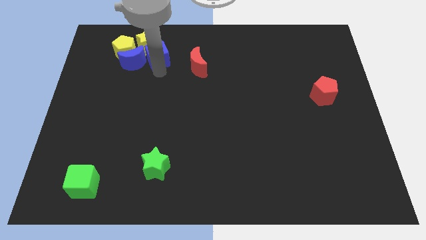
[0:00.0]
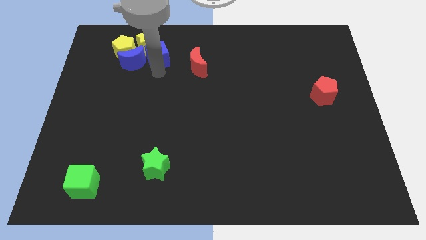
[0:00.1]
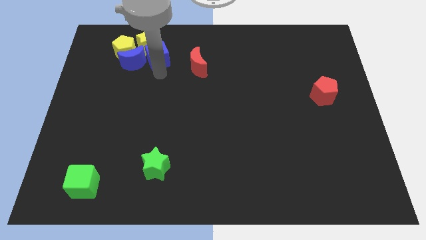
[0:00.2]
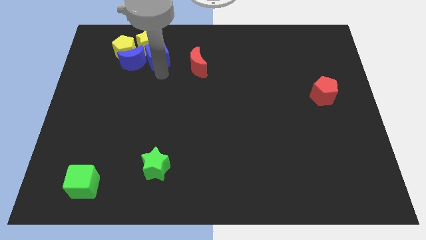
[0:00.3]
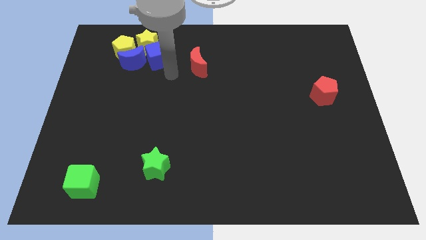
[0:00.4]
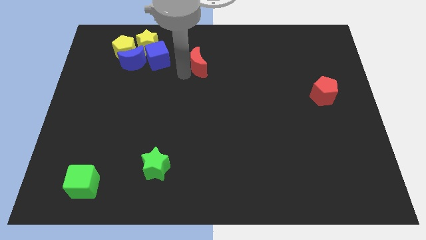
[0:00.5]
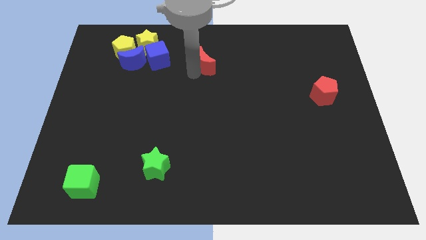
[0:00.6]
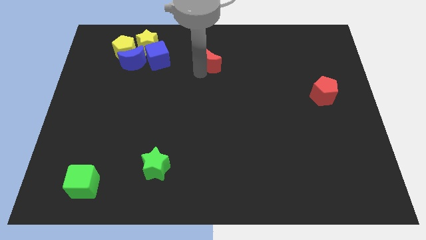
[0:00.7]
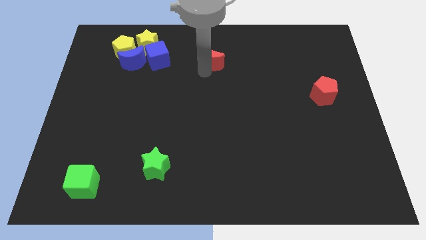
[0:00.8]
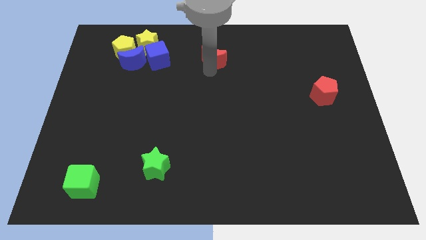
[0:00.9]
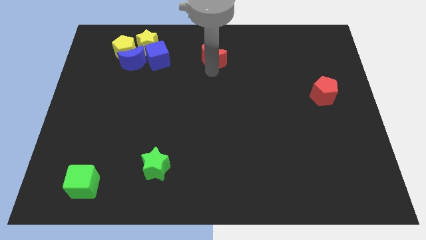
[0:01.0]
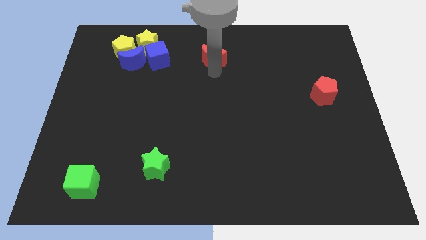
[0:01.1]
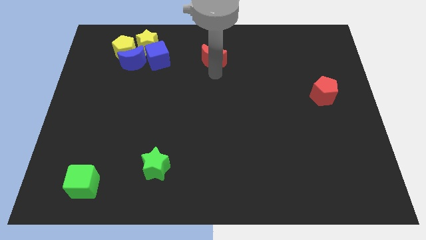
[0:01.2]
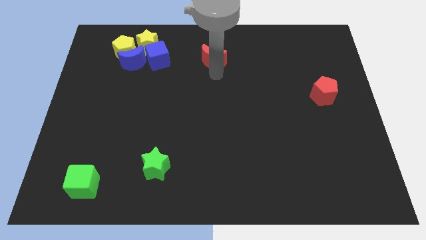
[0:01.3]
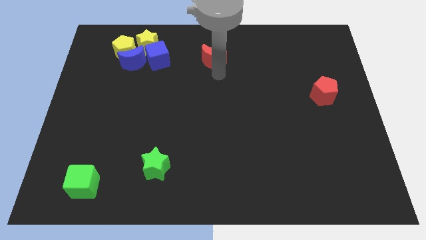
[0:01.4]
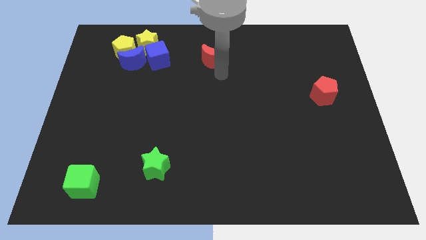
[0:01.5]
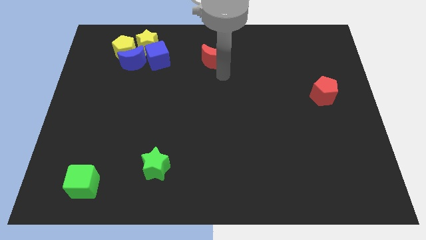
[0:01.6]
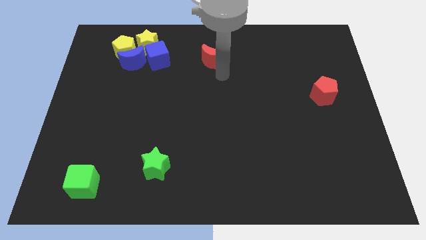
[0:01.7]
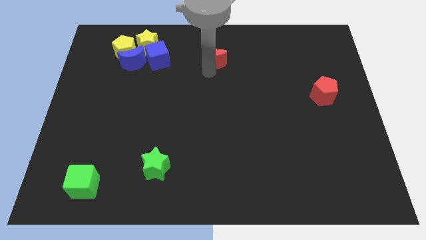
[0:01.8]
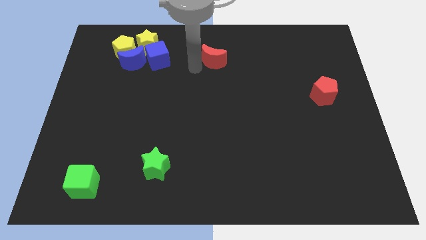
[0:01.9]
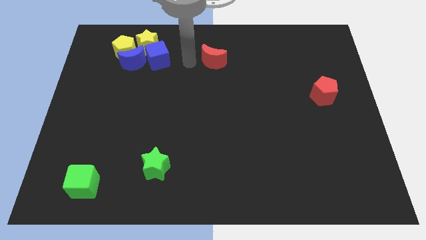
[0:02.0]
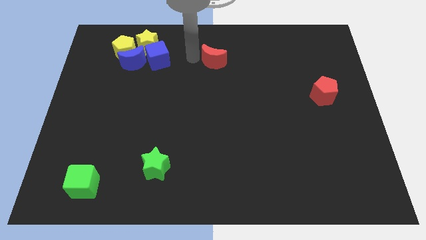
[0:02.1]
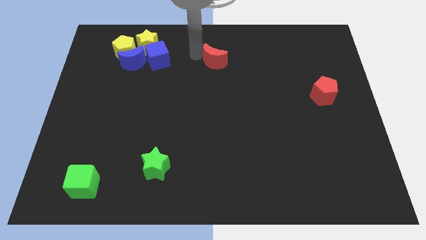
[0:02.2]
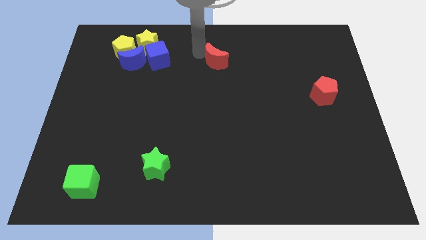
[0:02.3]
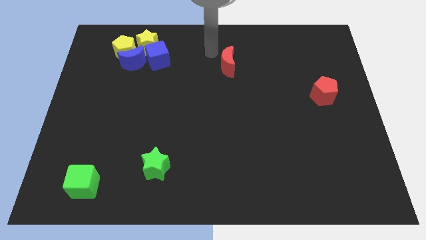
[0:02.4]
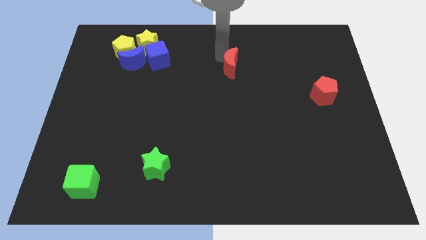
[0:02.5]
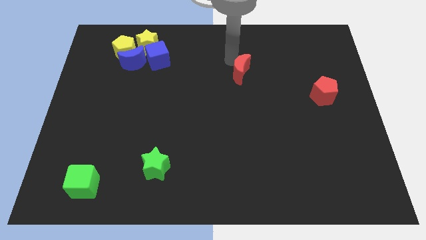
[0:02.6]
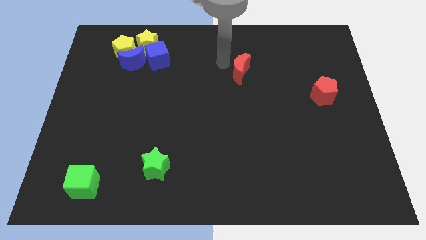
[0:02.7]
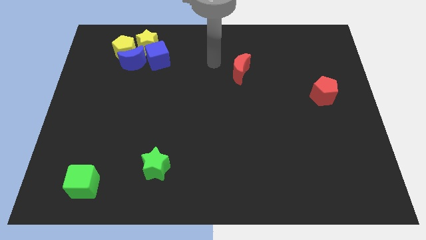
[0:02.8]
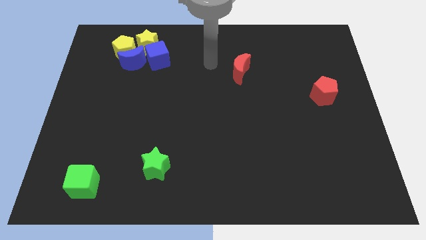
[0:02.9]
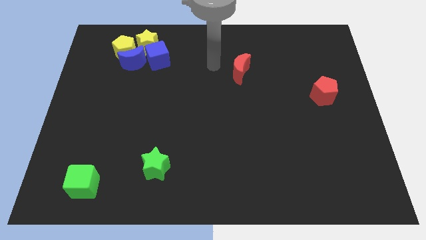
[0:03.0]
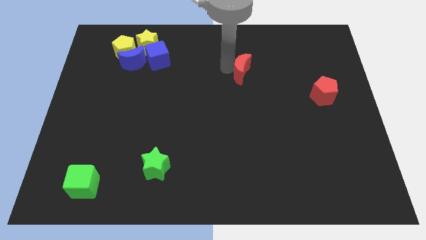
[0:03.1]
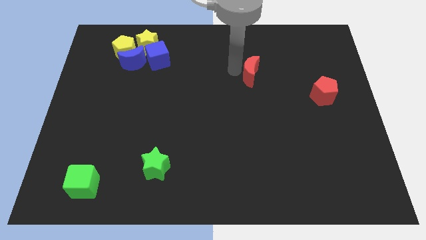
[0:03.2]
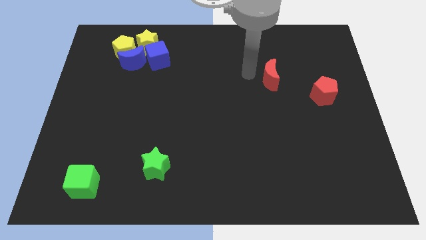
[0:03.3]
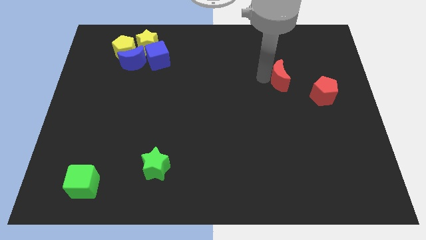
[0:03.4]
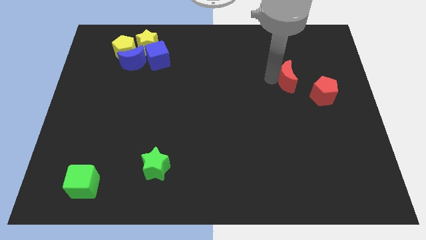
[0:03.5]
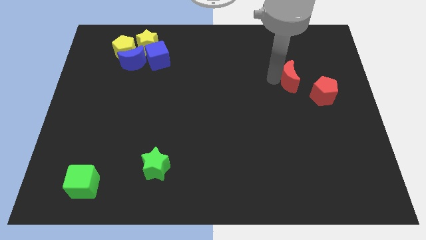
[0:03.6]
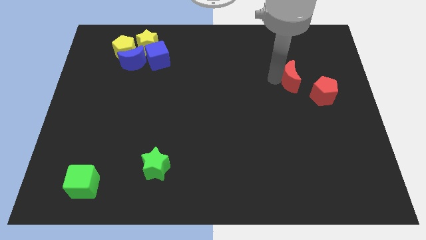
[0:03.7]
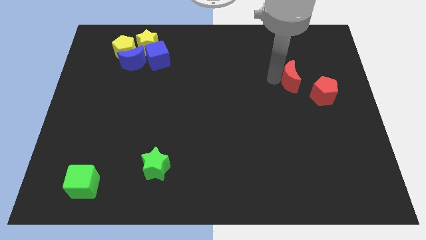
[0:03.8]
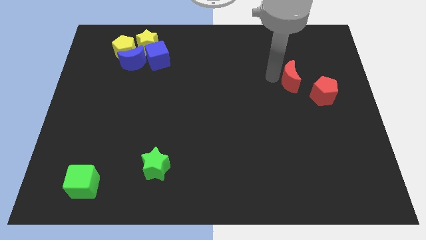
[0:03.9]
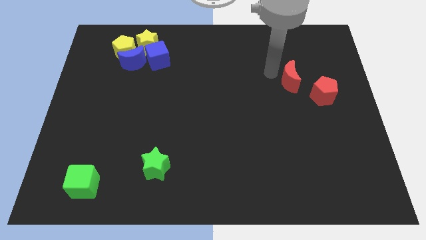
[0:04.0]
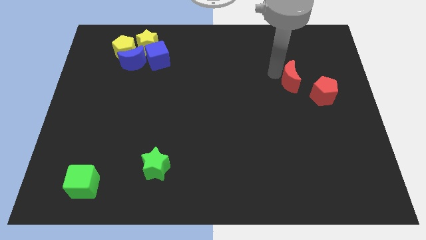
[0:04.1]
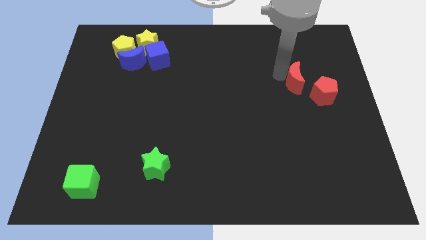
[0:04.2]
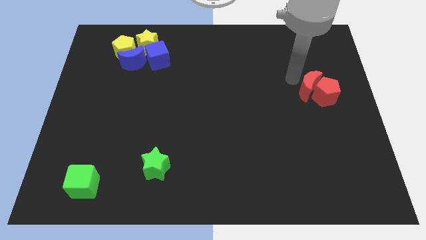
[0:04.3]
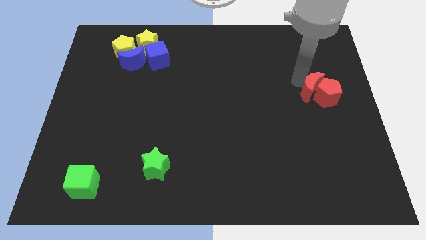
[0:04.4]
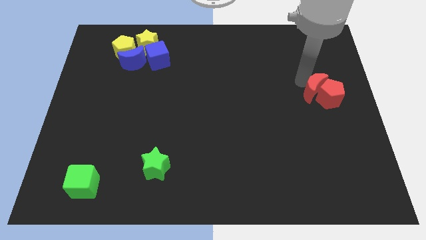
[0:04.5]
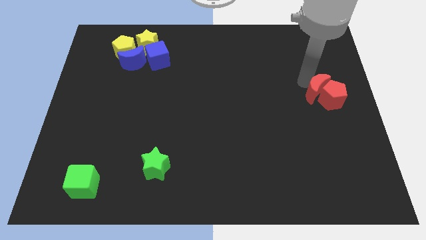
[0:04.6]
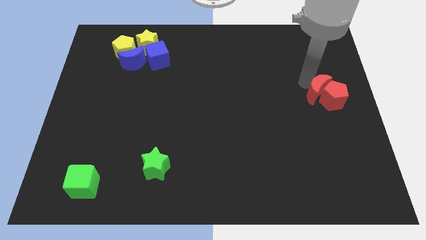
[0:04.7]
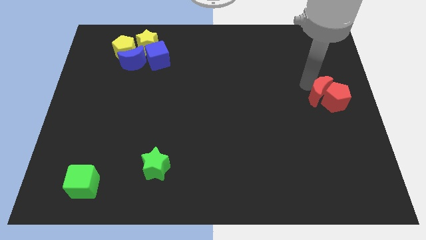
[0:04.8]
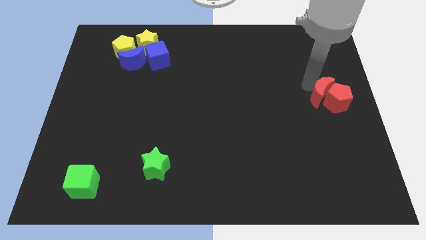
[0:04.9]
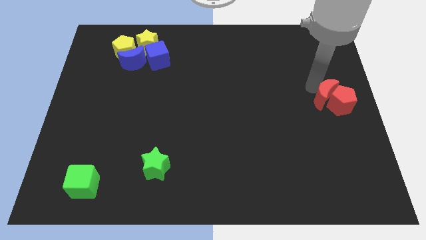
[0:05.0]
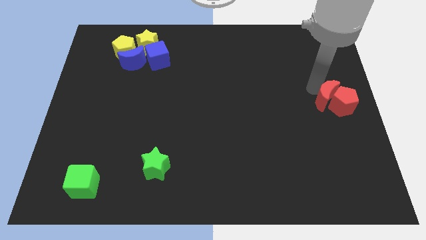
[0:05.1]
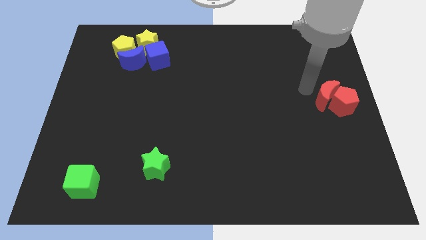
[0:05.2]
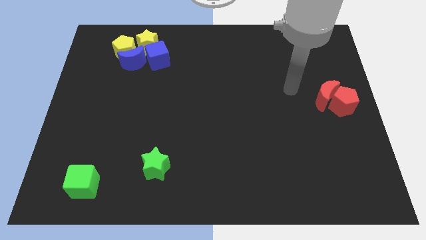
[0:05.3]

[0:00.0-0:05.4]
push the red crescent into the red pentagon

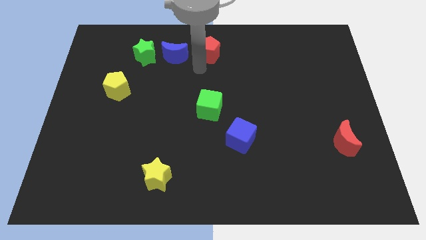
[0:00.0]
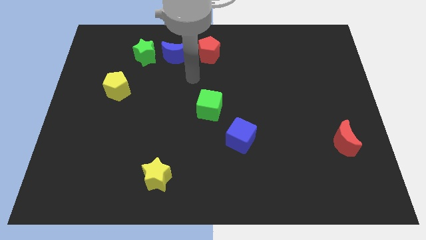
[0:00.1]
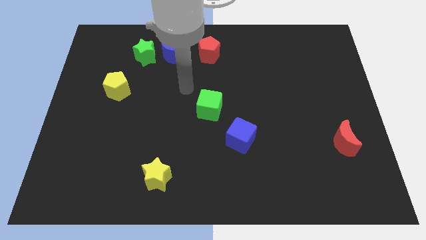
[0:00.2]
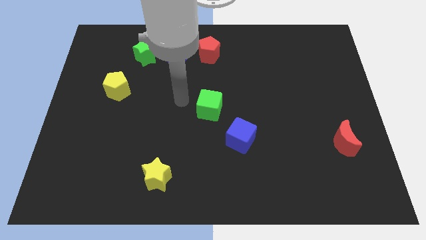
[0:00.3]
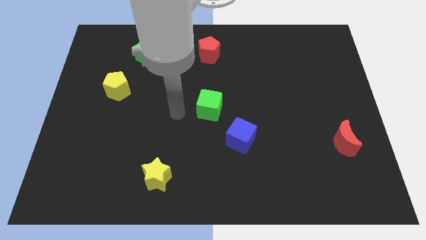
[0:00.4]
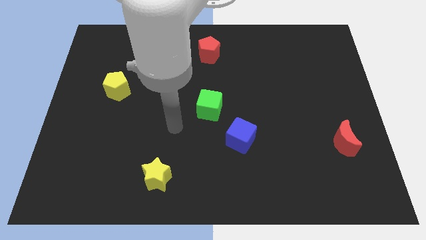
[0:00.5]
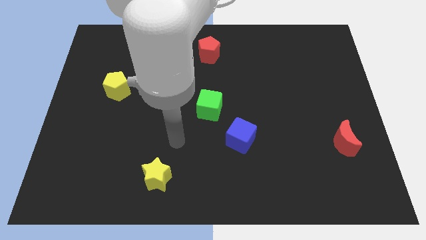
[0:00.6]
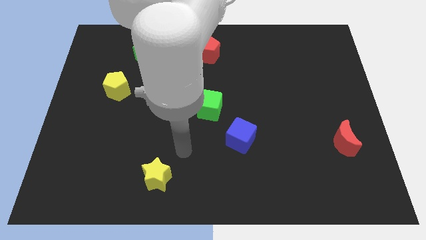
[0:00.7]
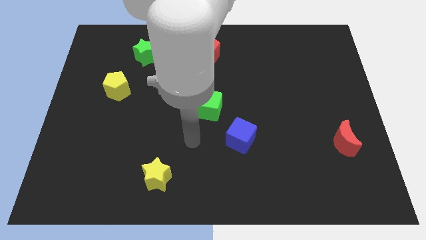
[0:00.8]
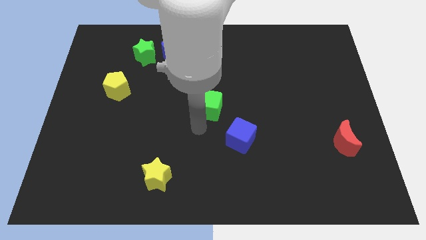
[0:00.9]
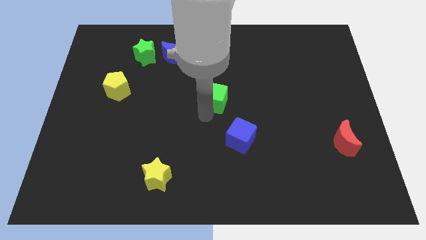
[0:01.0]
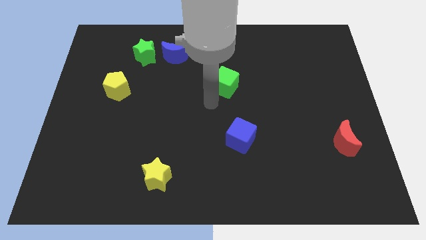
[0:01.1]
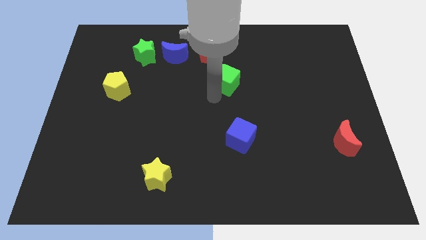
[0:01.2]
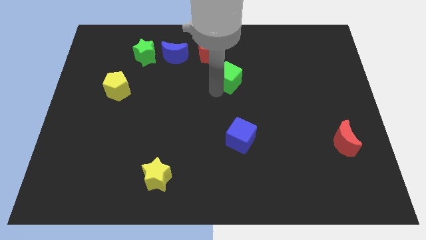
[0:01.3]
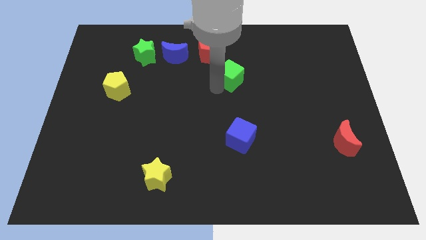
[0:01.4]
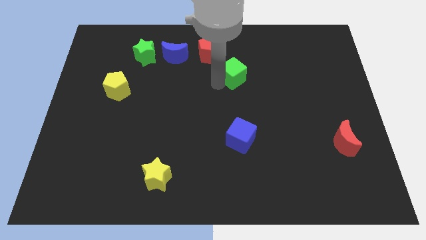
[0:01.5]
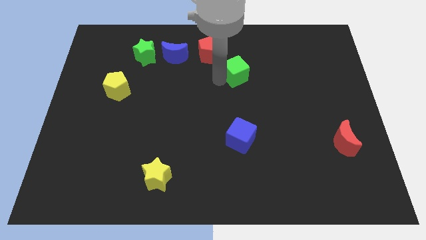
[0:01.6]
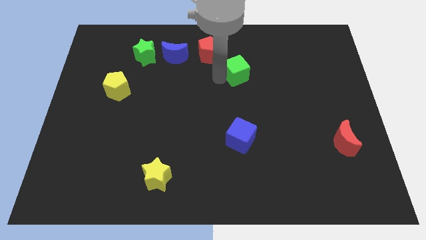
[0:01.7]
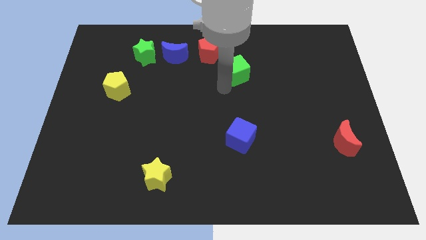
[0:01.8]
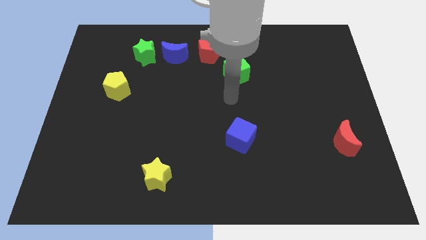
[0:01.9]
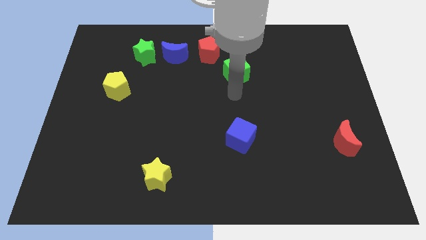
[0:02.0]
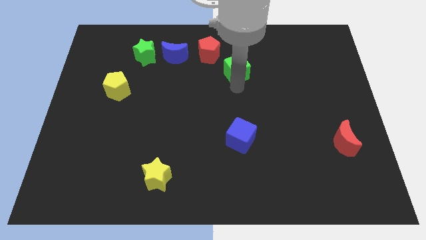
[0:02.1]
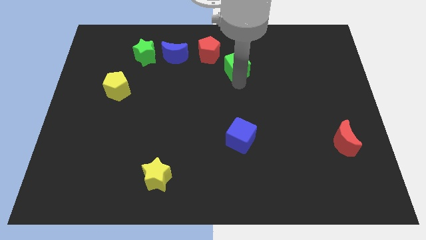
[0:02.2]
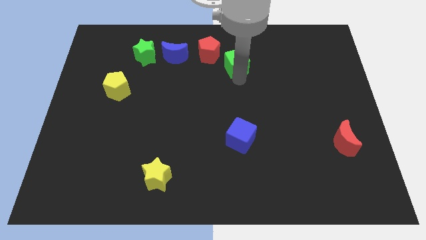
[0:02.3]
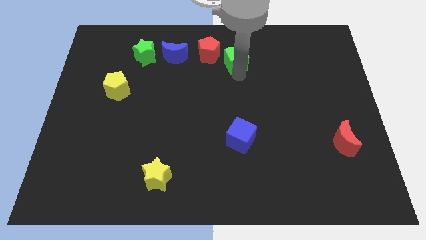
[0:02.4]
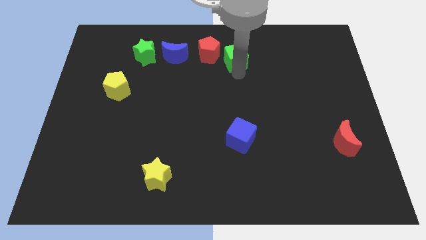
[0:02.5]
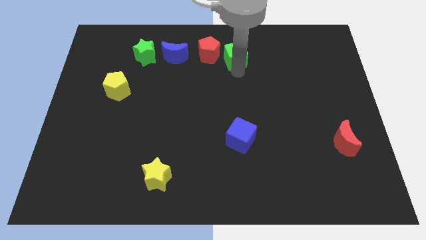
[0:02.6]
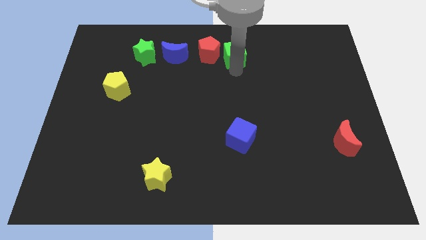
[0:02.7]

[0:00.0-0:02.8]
move the green cube right to the red pentagon

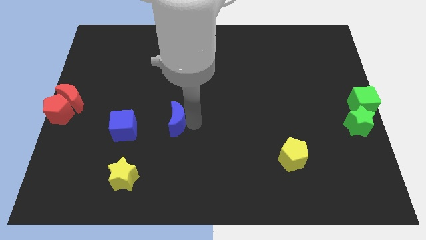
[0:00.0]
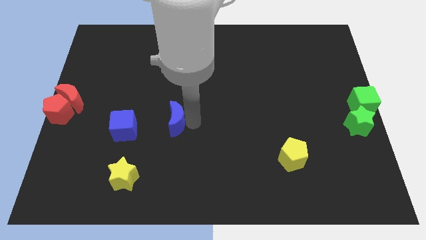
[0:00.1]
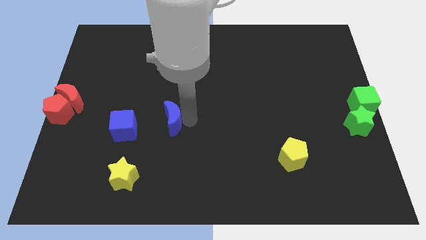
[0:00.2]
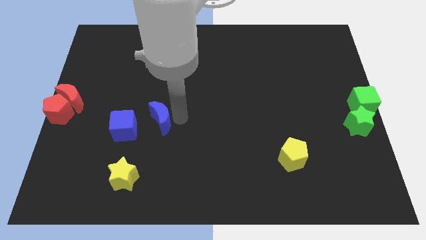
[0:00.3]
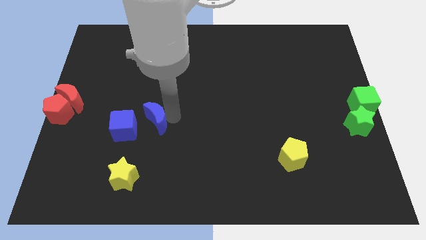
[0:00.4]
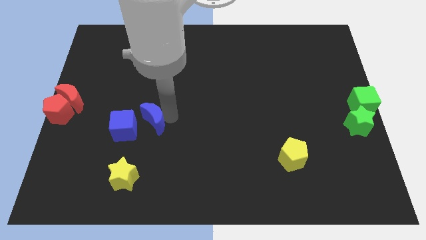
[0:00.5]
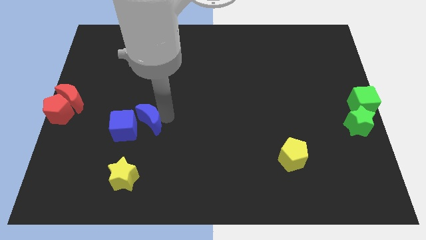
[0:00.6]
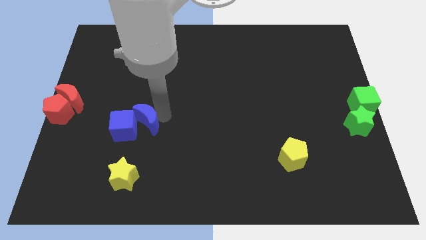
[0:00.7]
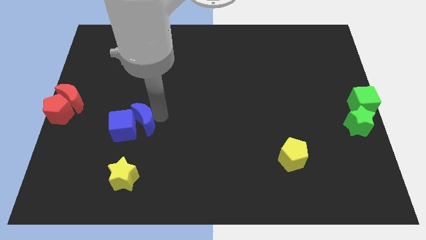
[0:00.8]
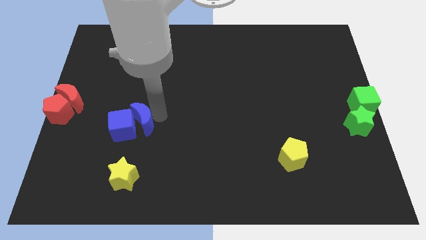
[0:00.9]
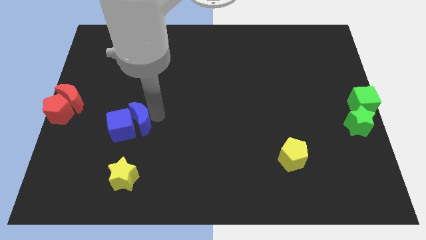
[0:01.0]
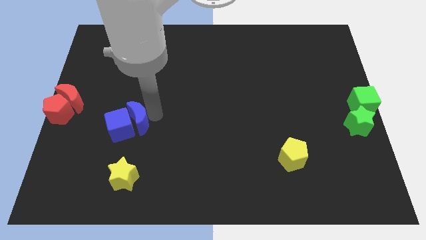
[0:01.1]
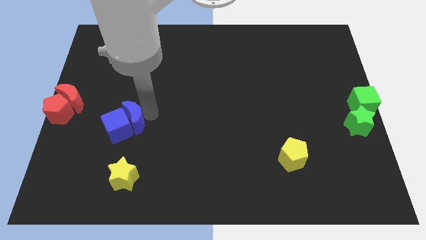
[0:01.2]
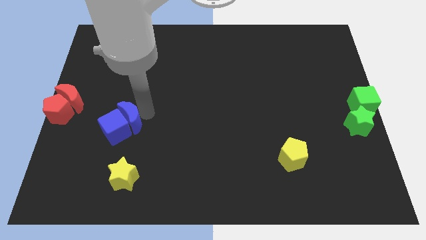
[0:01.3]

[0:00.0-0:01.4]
move the blue crescent to the right of the blue cube
